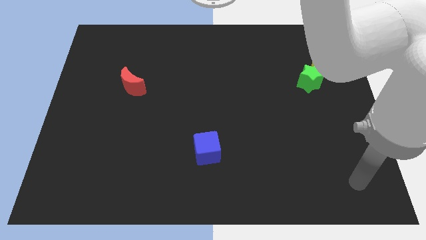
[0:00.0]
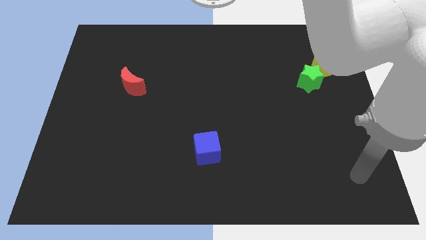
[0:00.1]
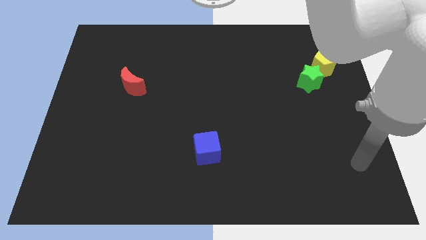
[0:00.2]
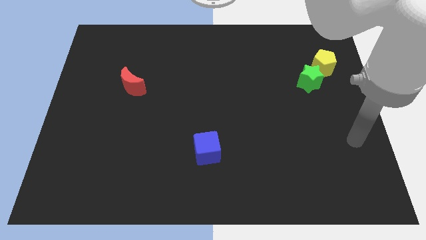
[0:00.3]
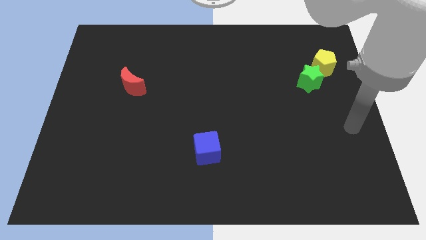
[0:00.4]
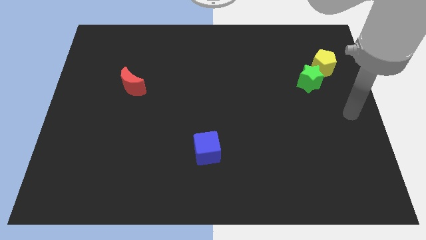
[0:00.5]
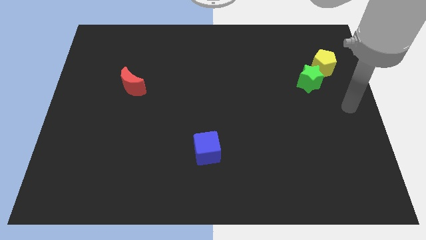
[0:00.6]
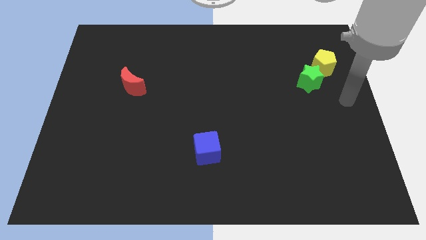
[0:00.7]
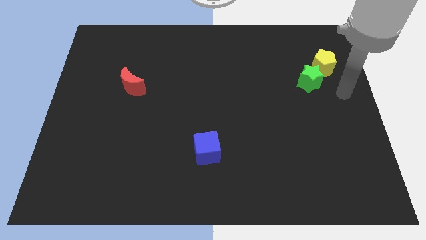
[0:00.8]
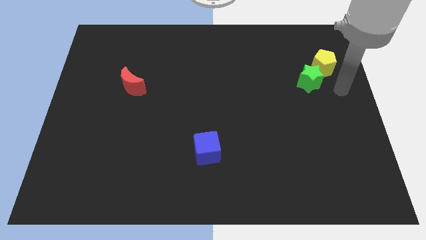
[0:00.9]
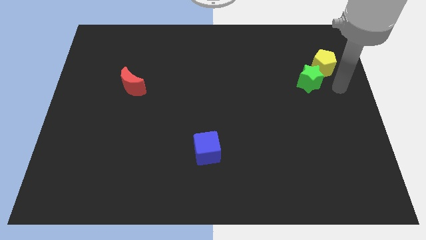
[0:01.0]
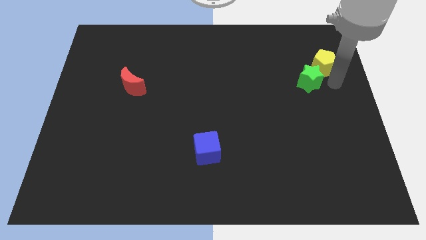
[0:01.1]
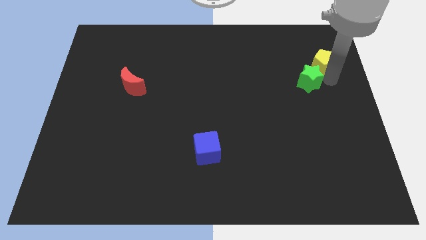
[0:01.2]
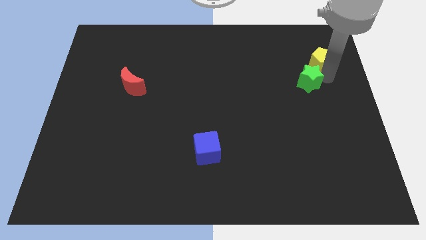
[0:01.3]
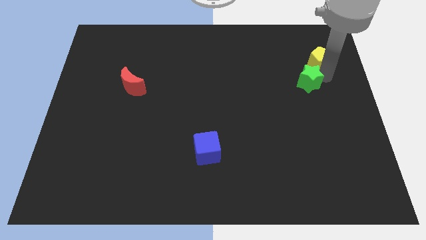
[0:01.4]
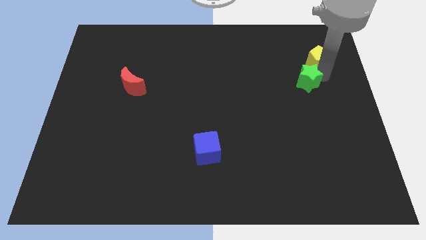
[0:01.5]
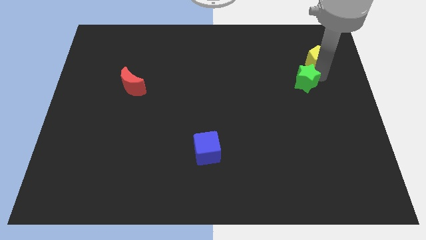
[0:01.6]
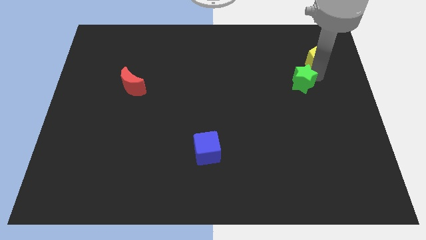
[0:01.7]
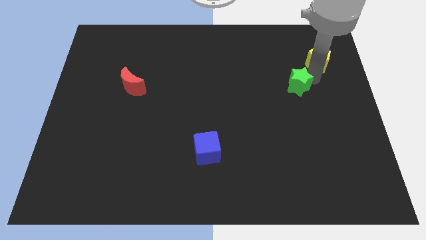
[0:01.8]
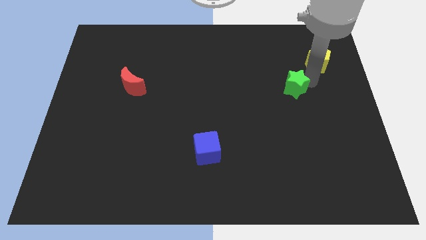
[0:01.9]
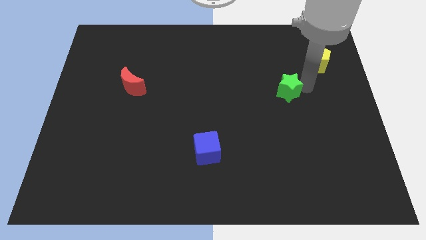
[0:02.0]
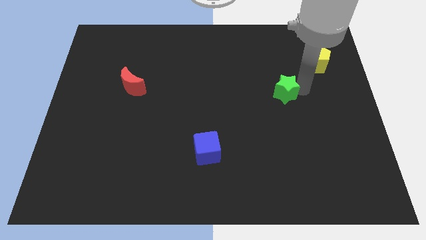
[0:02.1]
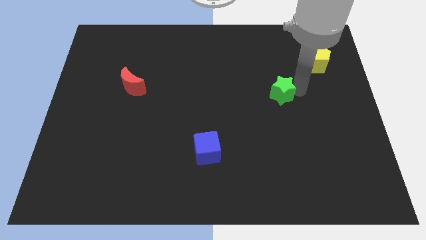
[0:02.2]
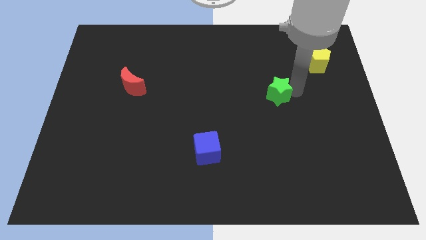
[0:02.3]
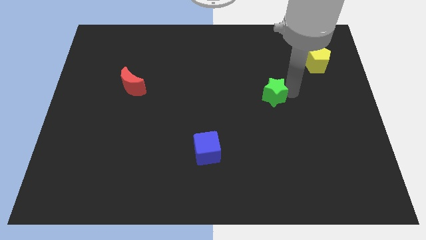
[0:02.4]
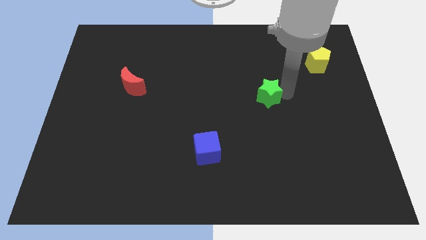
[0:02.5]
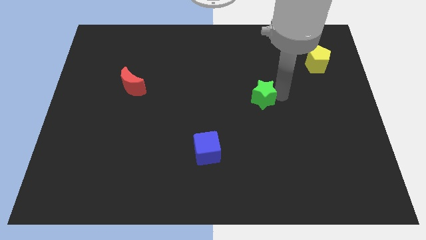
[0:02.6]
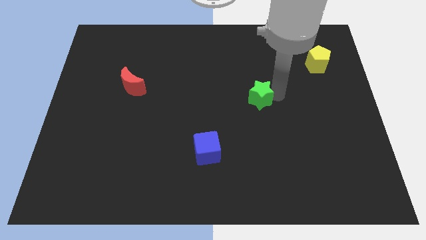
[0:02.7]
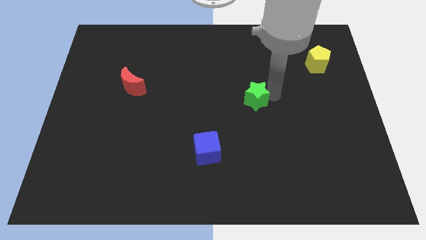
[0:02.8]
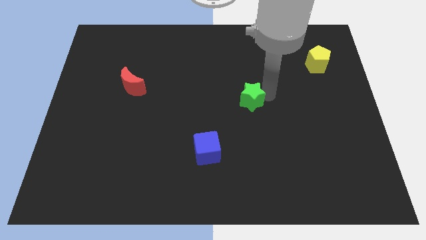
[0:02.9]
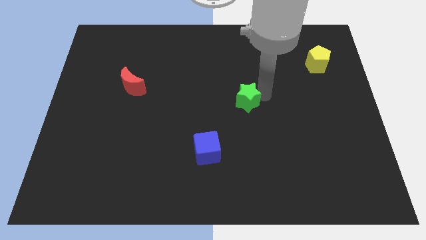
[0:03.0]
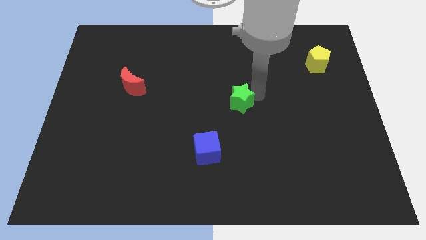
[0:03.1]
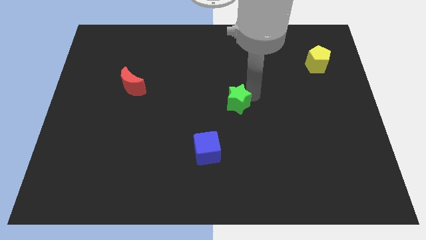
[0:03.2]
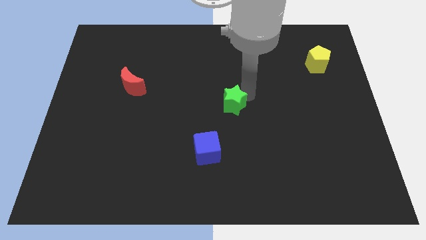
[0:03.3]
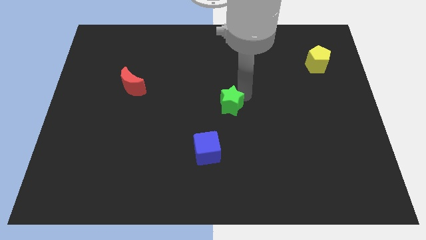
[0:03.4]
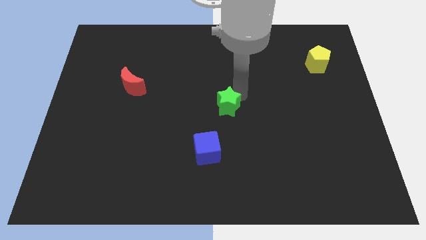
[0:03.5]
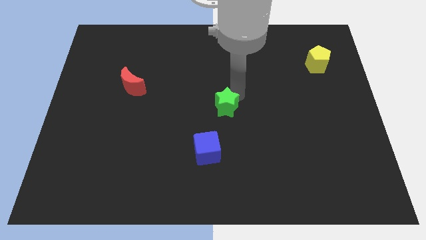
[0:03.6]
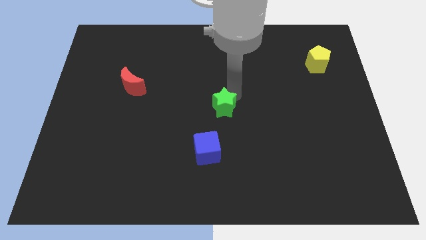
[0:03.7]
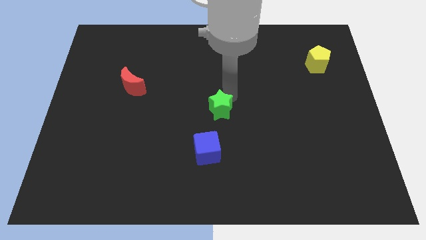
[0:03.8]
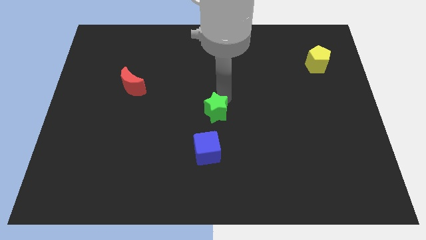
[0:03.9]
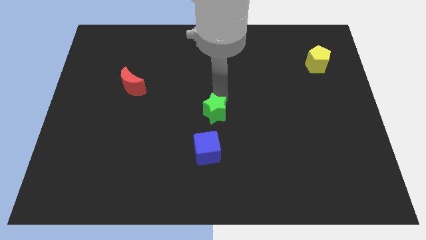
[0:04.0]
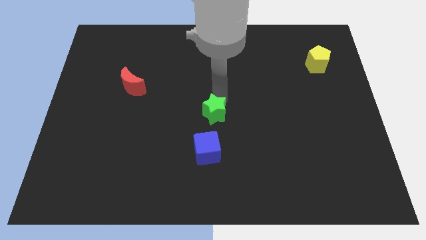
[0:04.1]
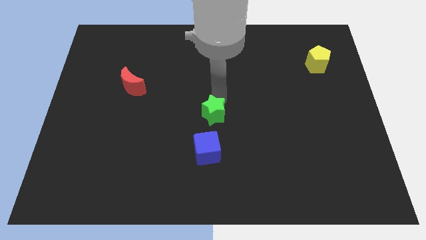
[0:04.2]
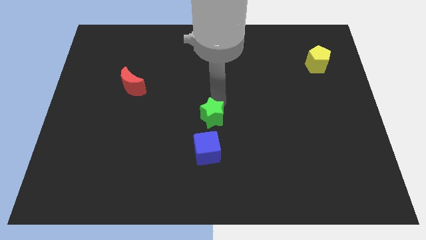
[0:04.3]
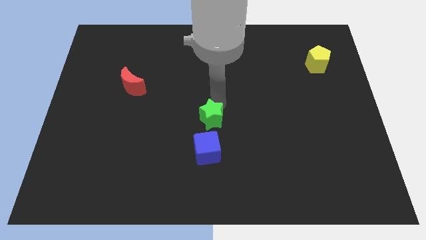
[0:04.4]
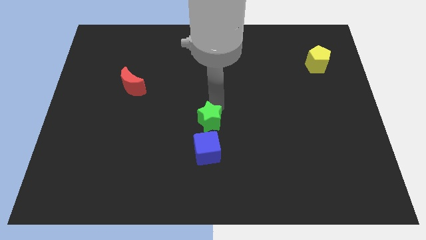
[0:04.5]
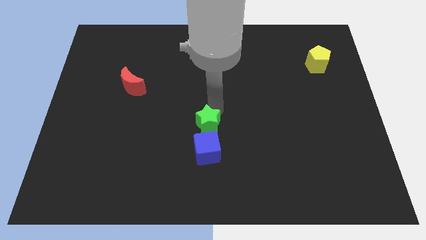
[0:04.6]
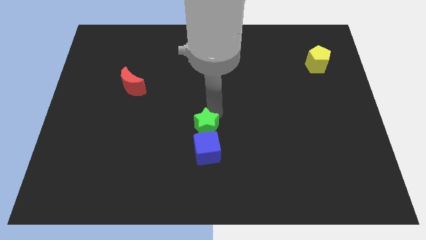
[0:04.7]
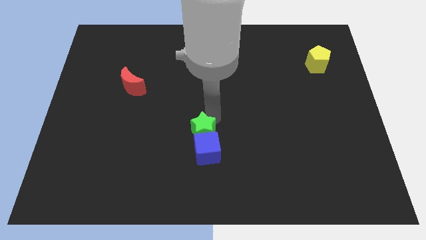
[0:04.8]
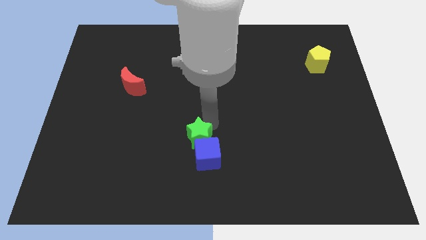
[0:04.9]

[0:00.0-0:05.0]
push the green star next to the blue cube

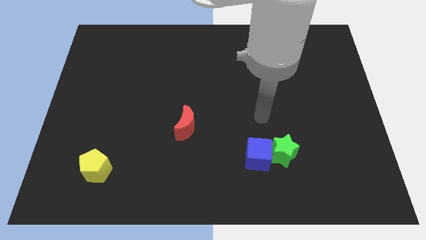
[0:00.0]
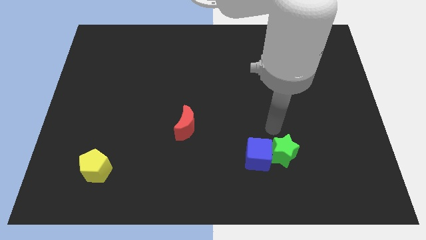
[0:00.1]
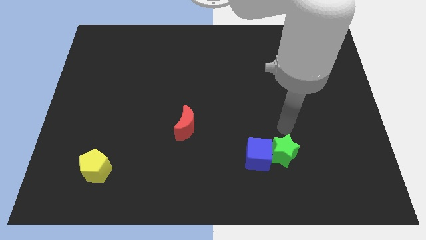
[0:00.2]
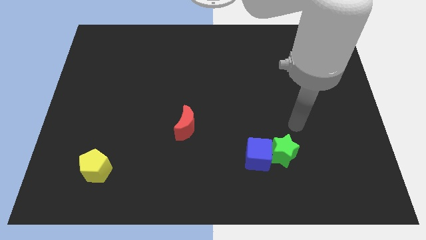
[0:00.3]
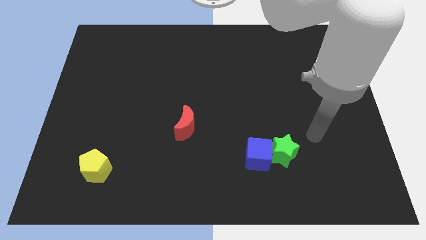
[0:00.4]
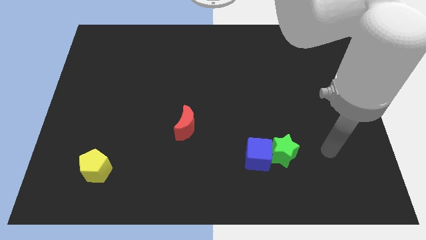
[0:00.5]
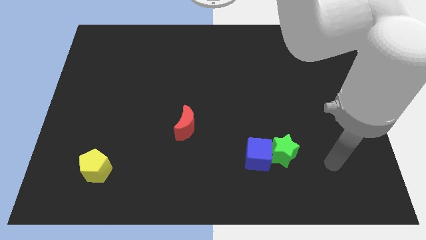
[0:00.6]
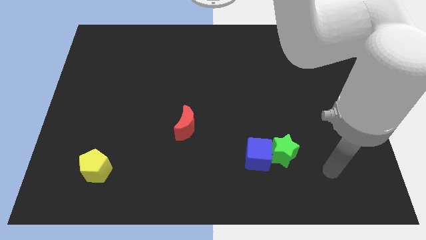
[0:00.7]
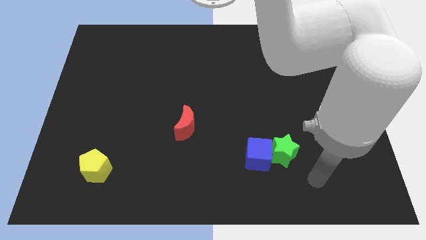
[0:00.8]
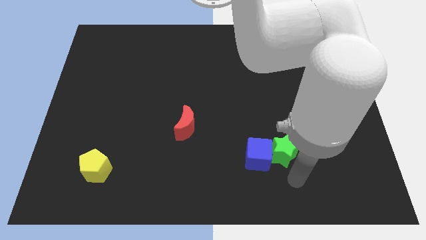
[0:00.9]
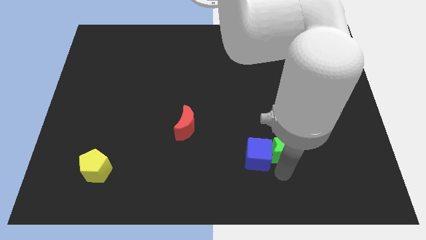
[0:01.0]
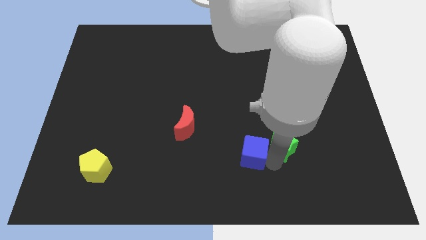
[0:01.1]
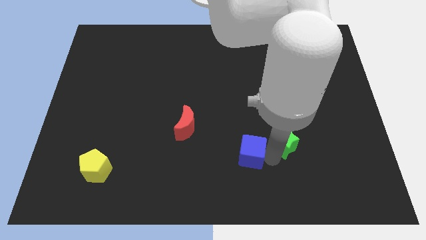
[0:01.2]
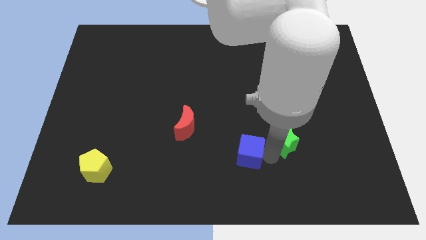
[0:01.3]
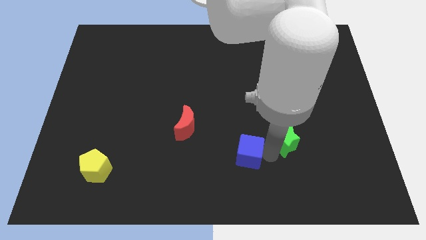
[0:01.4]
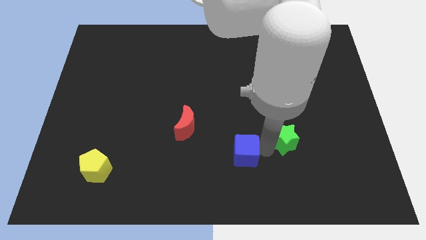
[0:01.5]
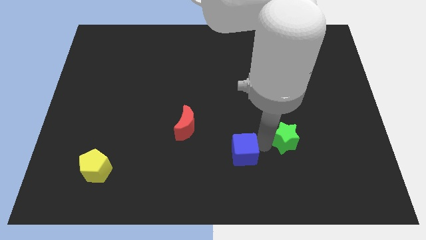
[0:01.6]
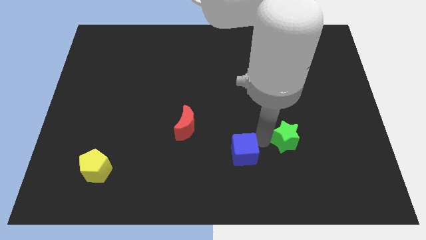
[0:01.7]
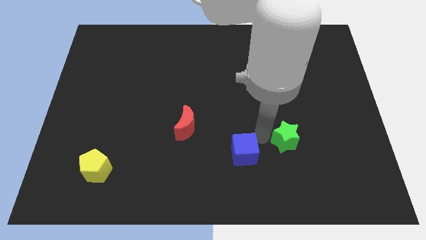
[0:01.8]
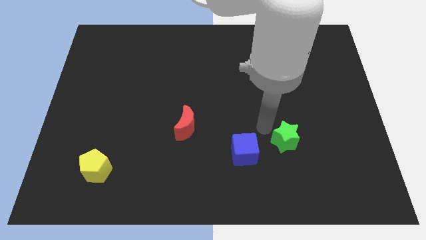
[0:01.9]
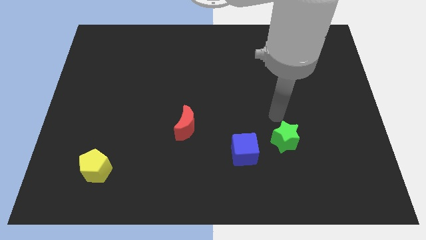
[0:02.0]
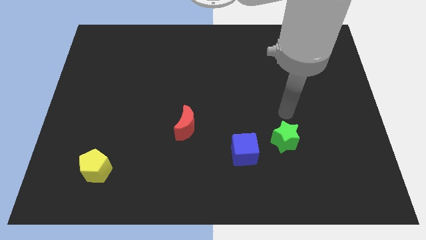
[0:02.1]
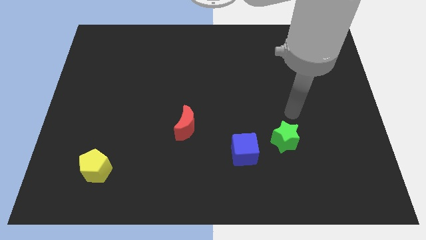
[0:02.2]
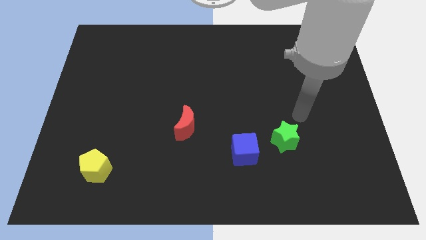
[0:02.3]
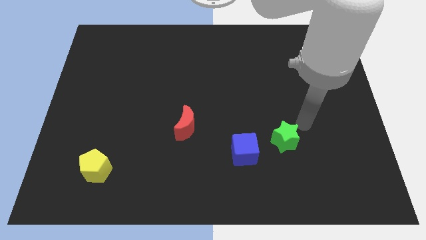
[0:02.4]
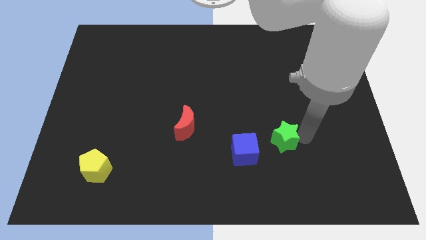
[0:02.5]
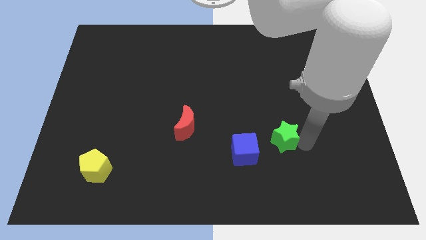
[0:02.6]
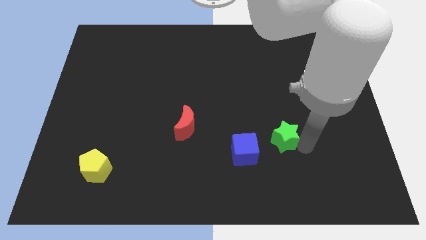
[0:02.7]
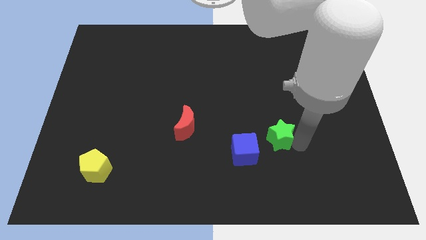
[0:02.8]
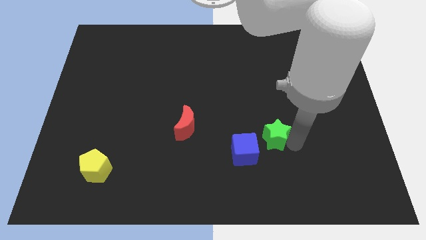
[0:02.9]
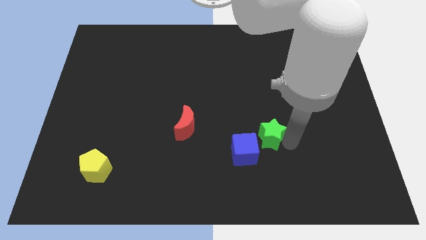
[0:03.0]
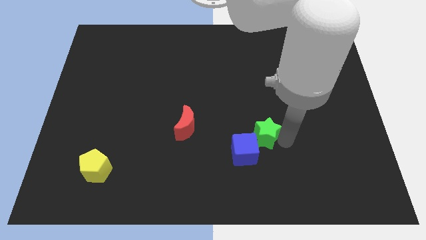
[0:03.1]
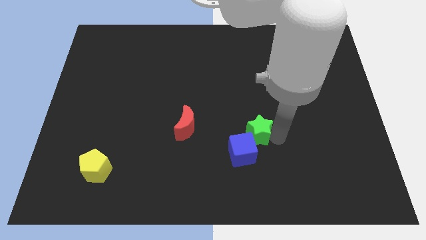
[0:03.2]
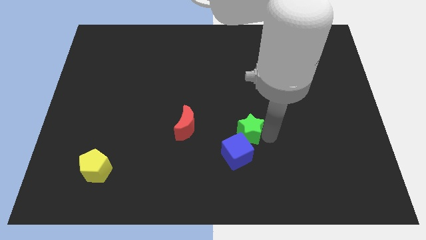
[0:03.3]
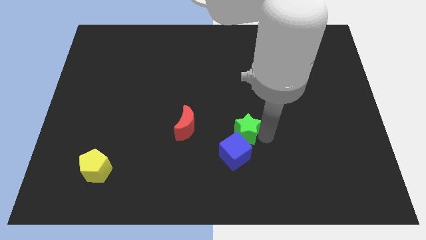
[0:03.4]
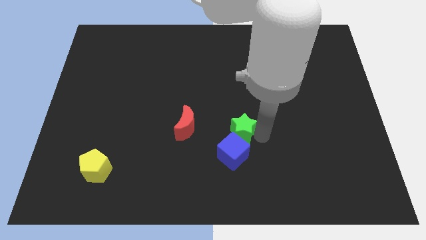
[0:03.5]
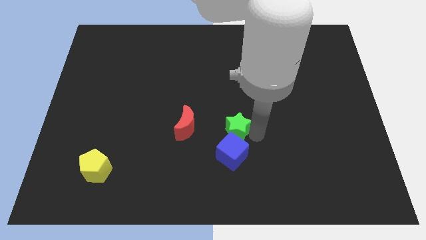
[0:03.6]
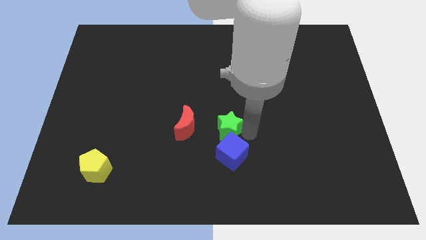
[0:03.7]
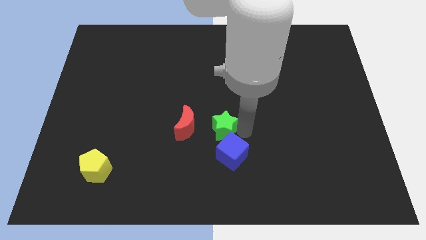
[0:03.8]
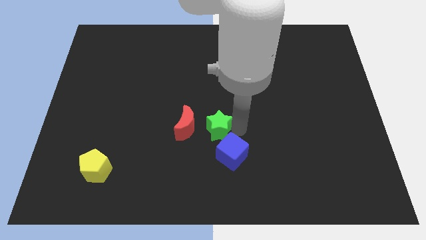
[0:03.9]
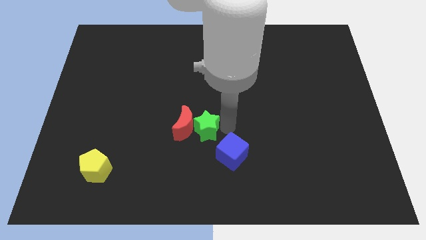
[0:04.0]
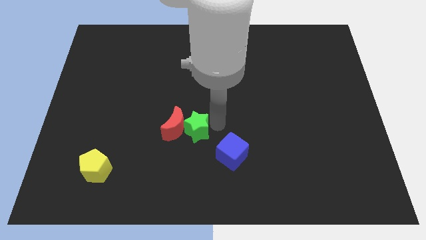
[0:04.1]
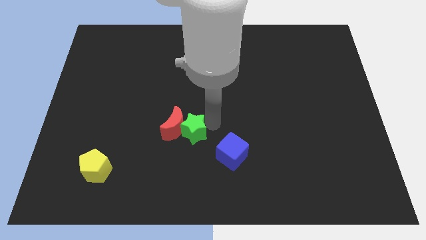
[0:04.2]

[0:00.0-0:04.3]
put the star towards the moon
